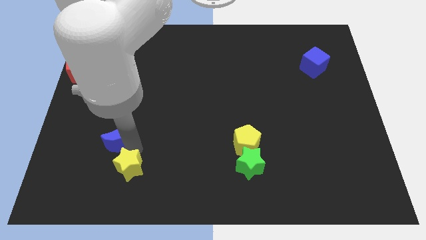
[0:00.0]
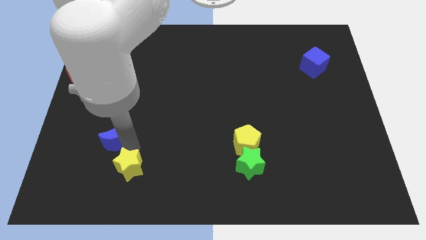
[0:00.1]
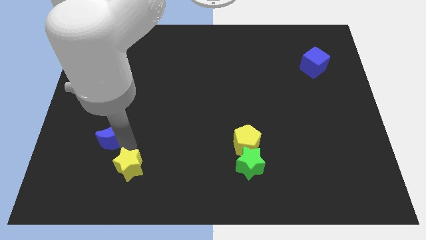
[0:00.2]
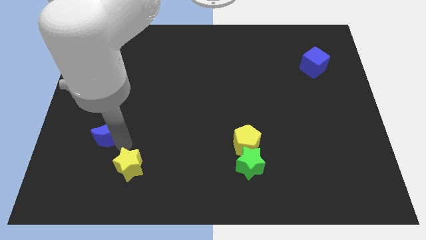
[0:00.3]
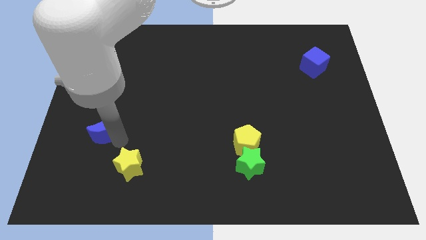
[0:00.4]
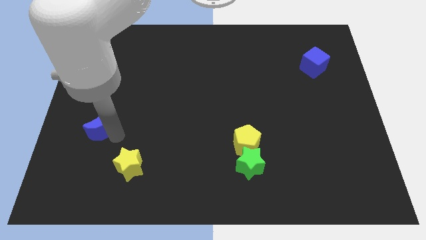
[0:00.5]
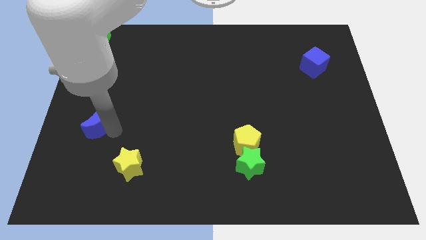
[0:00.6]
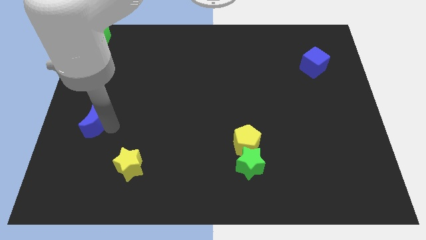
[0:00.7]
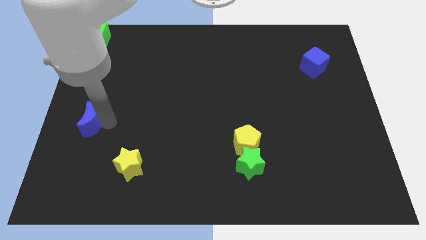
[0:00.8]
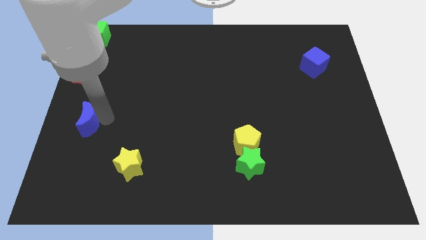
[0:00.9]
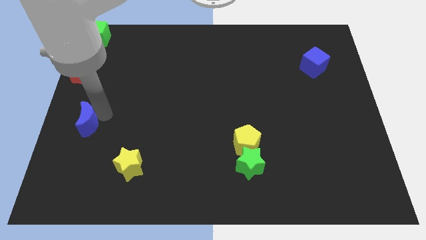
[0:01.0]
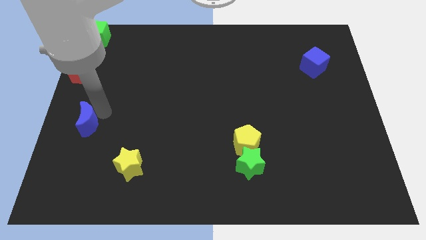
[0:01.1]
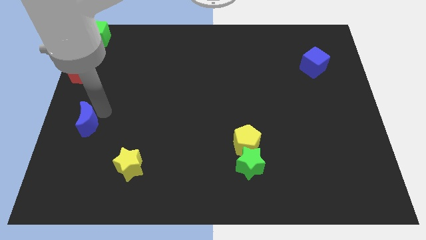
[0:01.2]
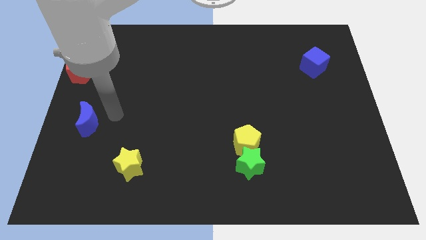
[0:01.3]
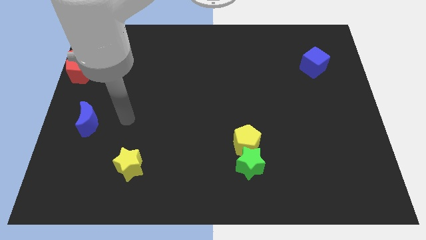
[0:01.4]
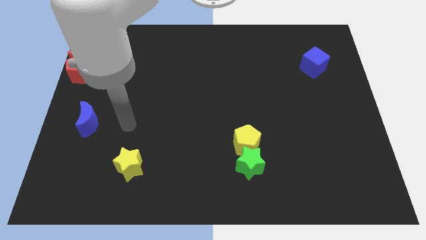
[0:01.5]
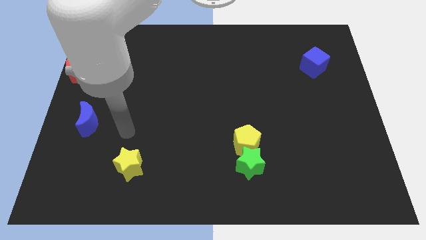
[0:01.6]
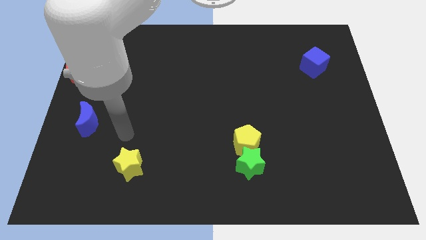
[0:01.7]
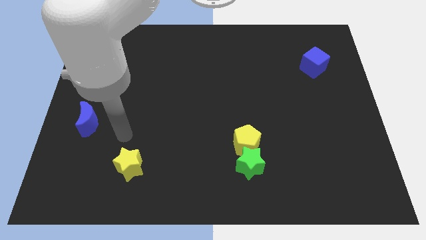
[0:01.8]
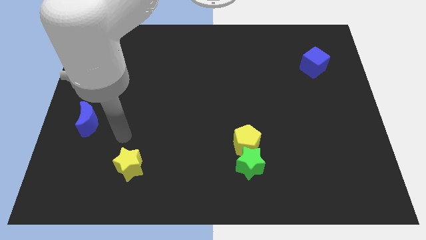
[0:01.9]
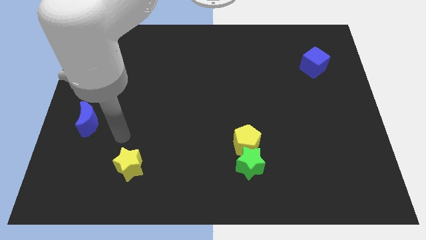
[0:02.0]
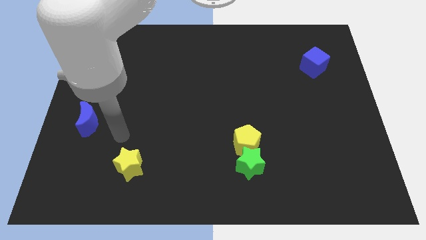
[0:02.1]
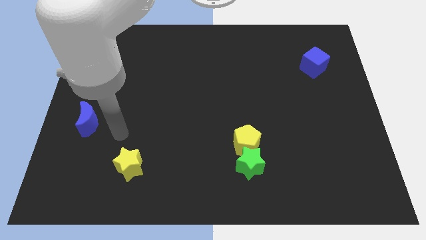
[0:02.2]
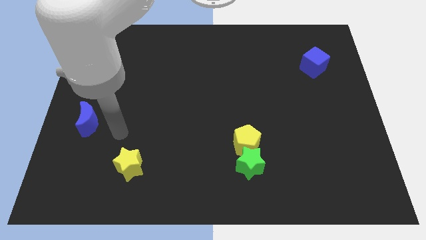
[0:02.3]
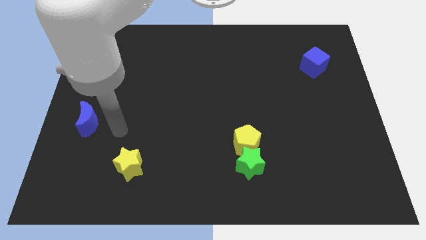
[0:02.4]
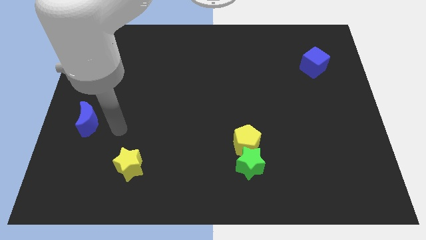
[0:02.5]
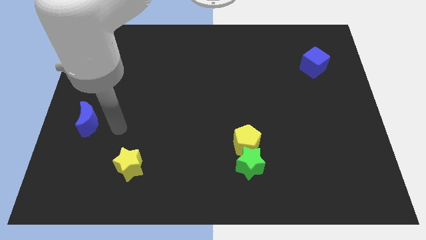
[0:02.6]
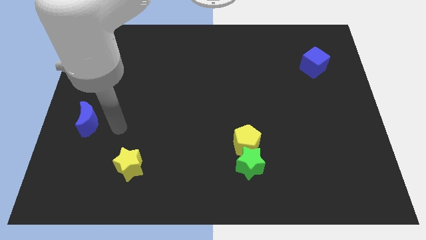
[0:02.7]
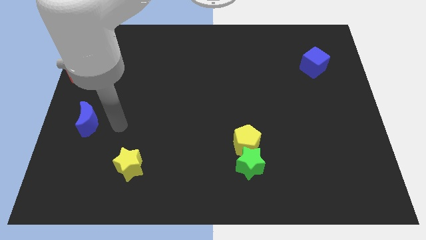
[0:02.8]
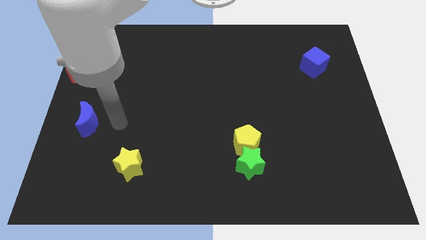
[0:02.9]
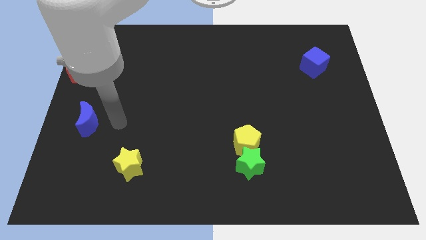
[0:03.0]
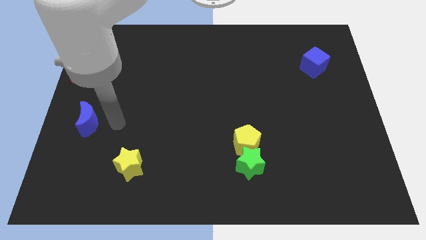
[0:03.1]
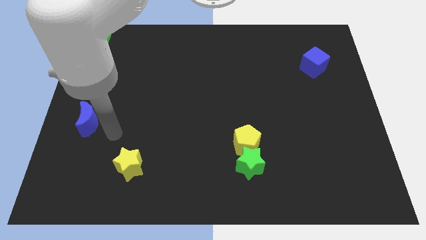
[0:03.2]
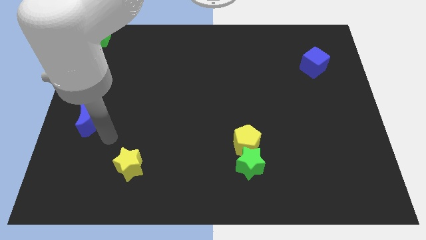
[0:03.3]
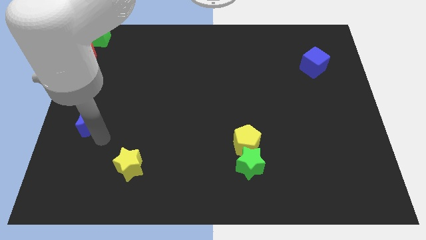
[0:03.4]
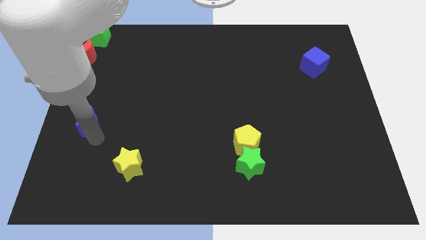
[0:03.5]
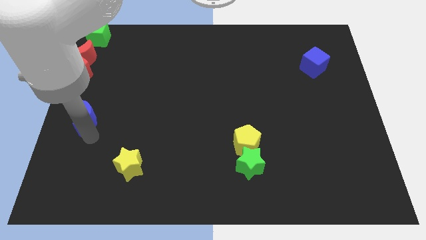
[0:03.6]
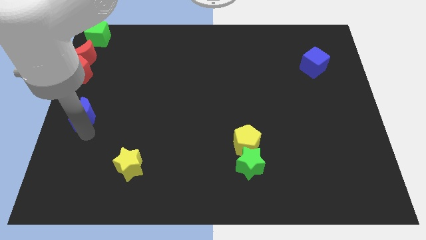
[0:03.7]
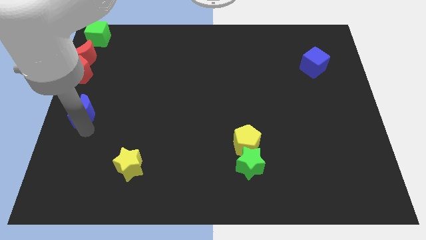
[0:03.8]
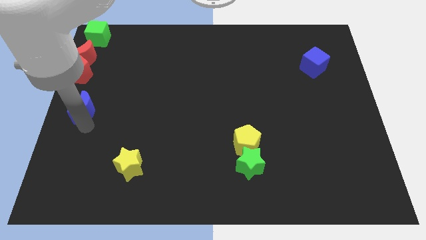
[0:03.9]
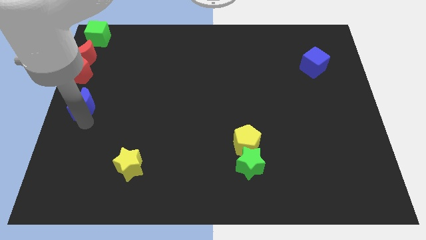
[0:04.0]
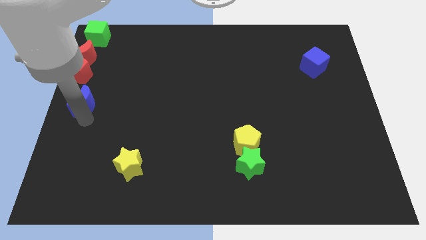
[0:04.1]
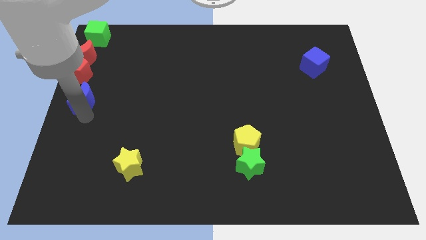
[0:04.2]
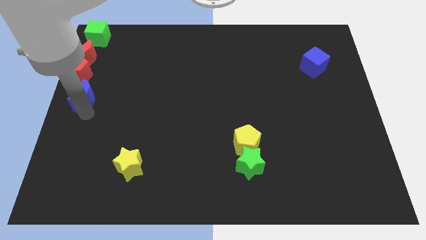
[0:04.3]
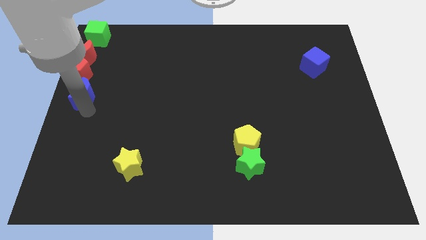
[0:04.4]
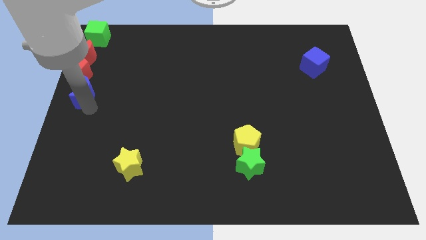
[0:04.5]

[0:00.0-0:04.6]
push the blue crescent to the bottom of the red pentagon

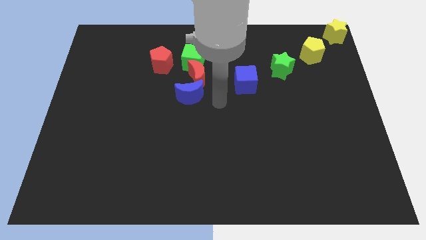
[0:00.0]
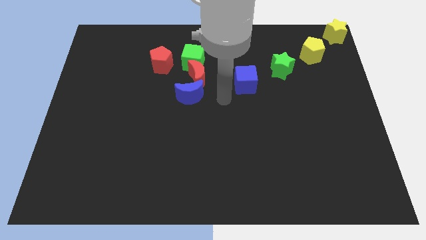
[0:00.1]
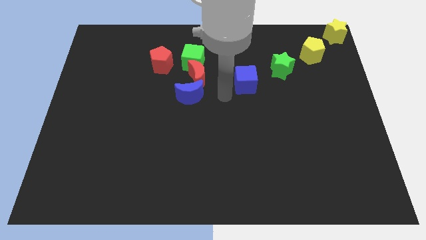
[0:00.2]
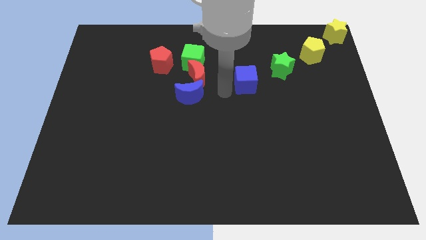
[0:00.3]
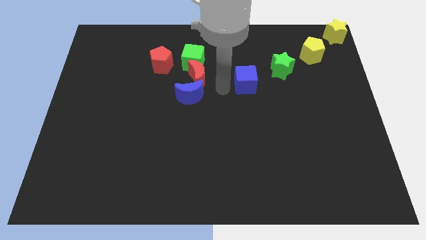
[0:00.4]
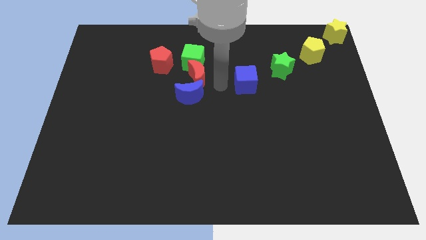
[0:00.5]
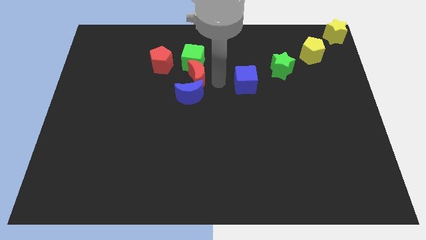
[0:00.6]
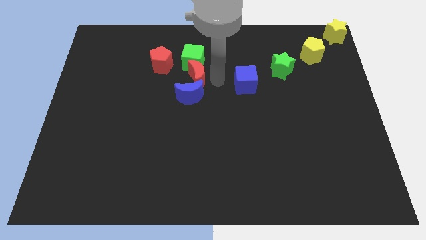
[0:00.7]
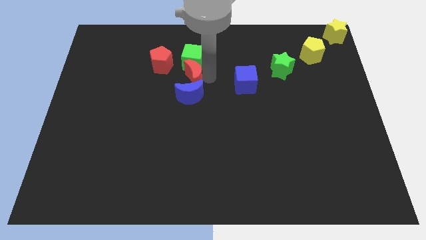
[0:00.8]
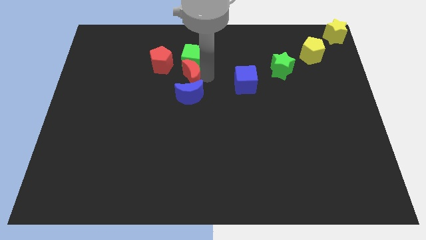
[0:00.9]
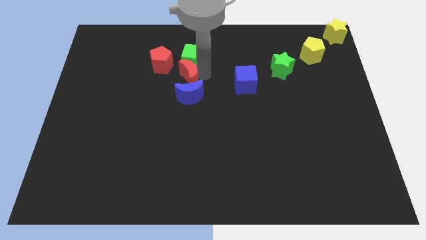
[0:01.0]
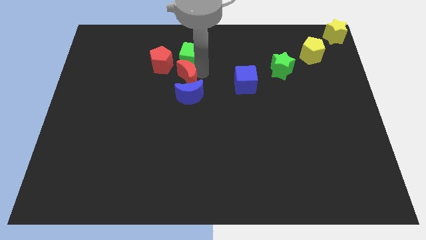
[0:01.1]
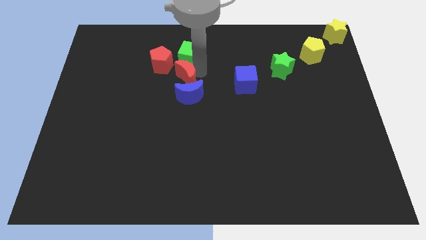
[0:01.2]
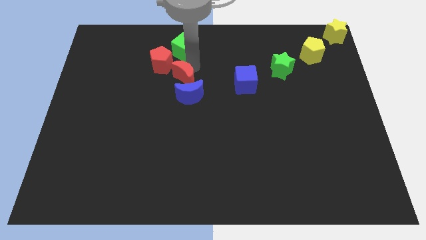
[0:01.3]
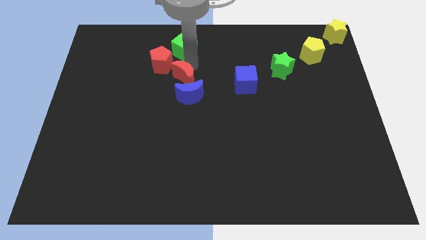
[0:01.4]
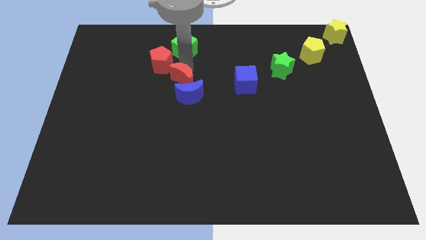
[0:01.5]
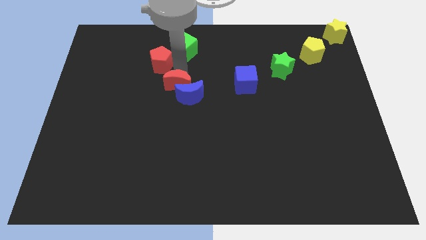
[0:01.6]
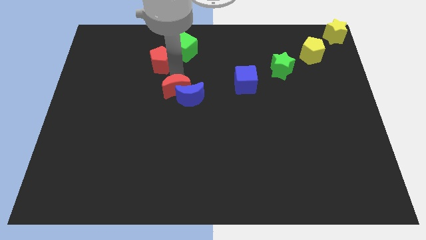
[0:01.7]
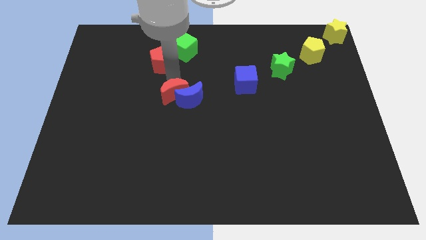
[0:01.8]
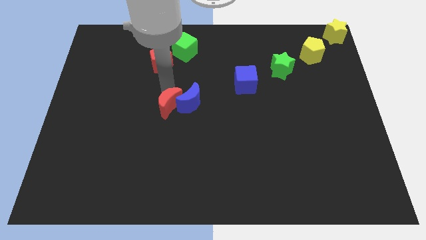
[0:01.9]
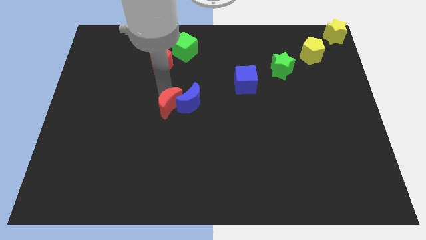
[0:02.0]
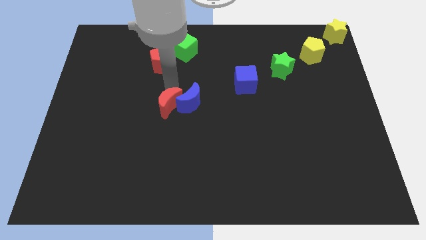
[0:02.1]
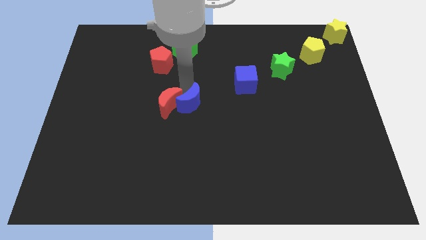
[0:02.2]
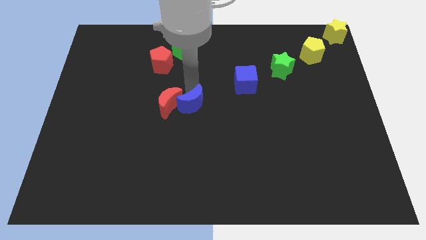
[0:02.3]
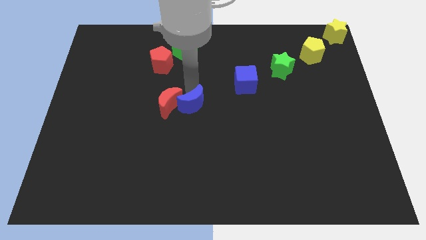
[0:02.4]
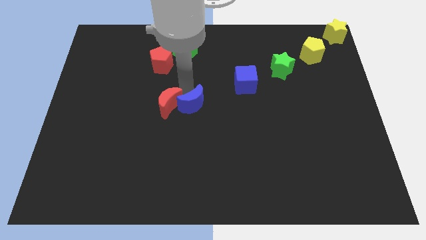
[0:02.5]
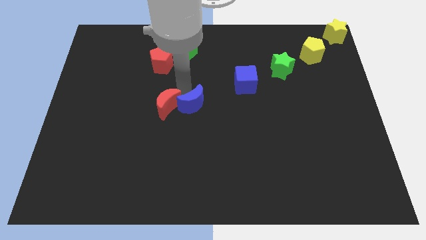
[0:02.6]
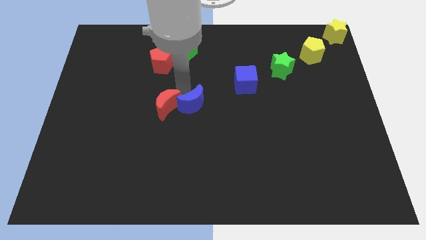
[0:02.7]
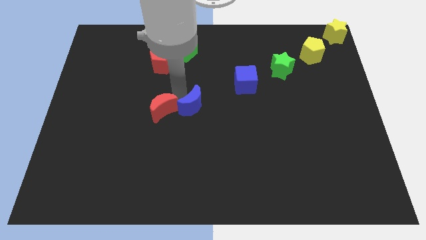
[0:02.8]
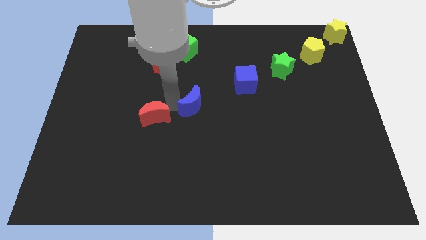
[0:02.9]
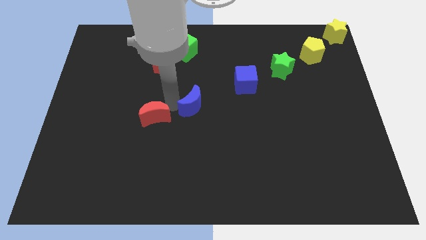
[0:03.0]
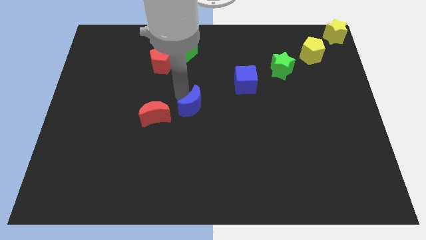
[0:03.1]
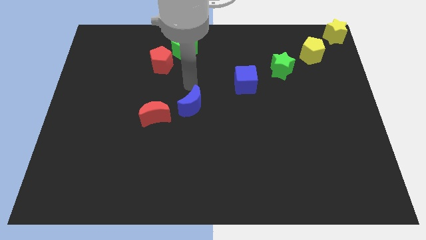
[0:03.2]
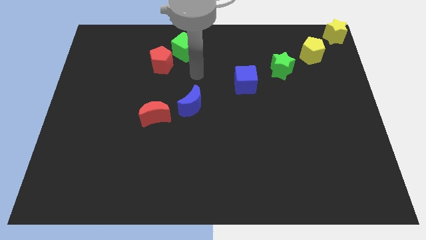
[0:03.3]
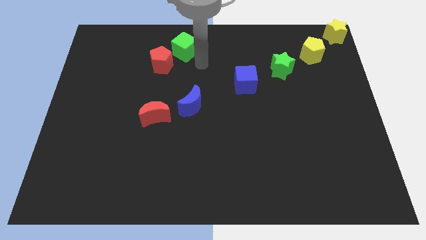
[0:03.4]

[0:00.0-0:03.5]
move the red and blue moon diagonal to each other

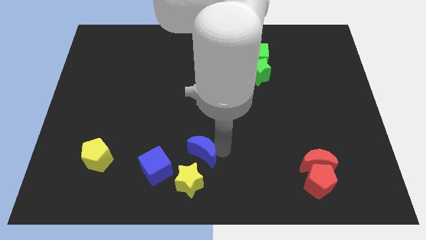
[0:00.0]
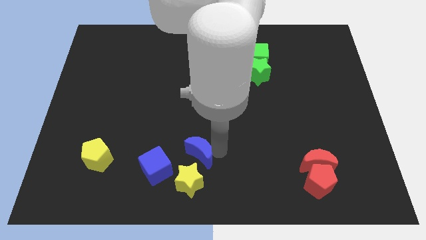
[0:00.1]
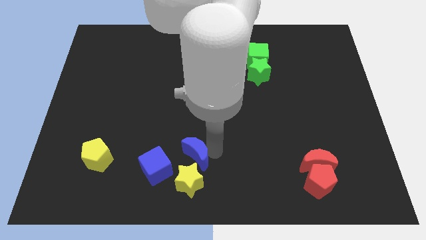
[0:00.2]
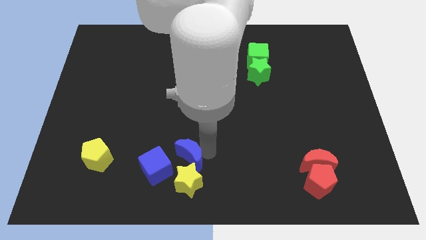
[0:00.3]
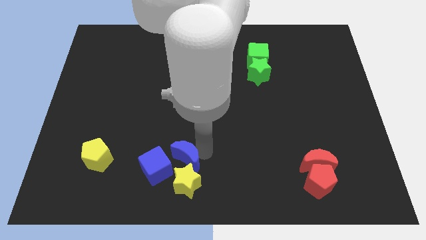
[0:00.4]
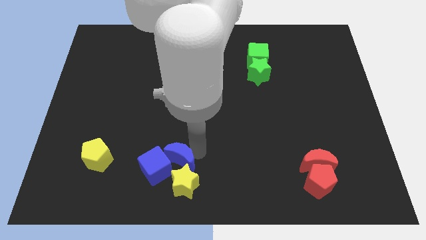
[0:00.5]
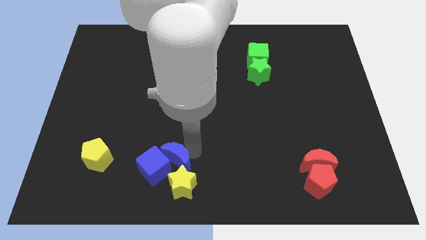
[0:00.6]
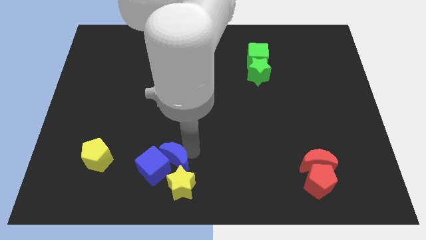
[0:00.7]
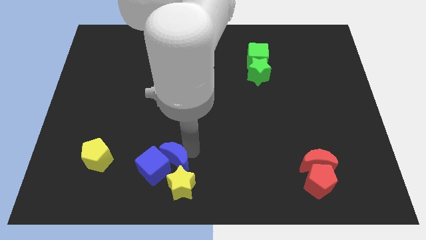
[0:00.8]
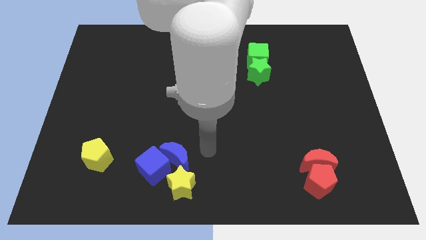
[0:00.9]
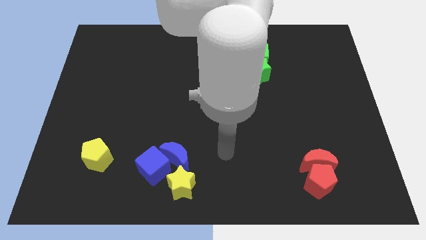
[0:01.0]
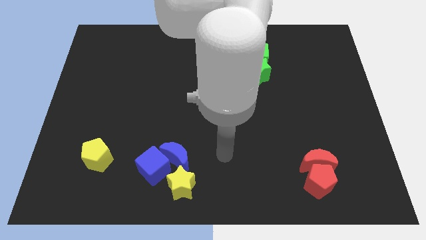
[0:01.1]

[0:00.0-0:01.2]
push the blue moon into the group of object
